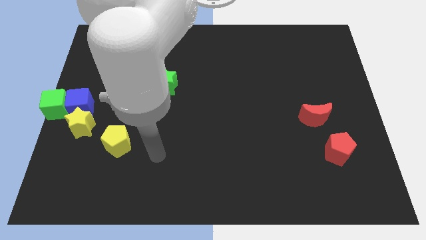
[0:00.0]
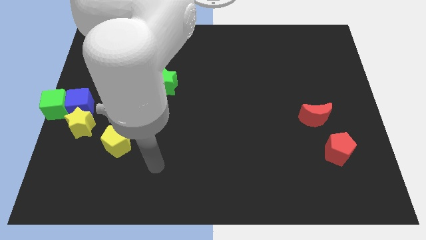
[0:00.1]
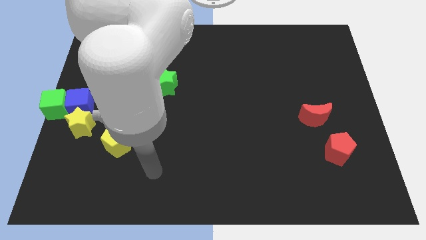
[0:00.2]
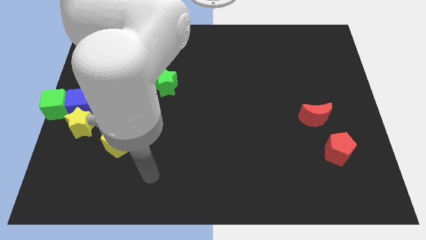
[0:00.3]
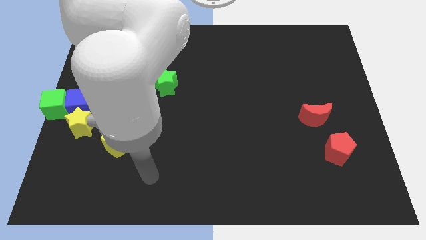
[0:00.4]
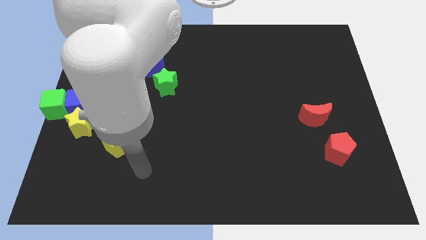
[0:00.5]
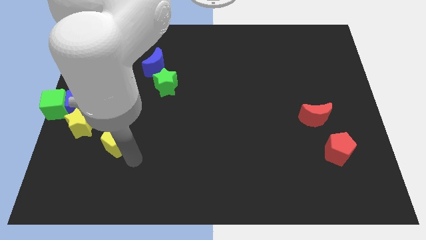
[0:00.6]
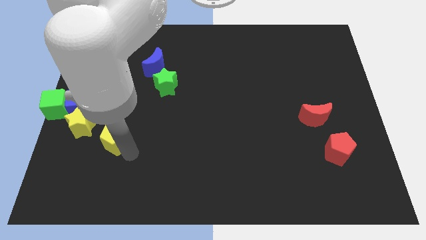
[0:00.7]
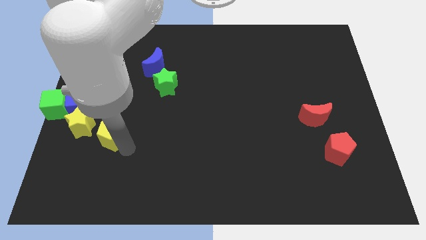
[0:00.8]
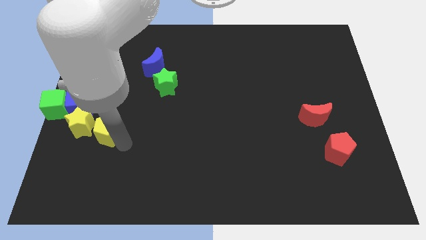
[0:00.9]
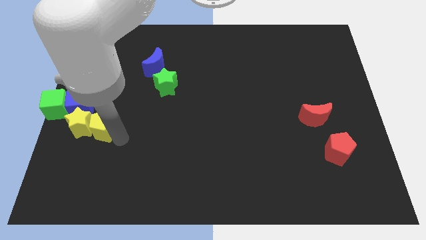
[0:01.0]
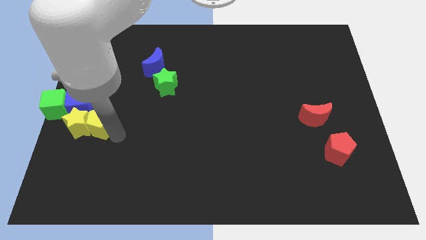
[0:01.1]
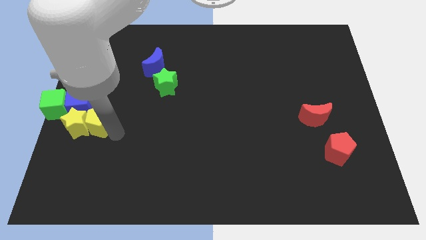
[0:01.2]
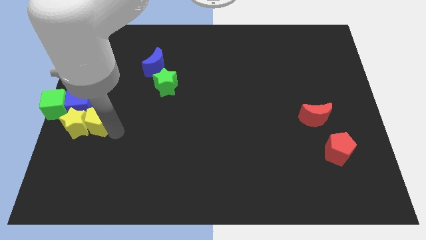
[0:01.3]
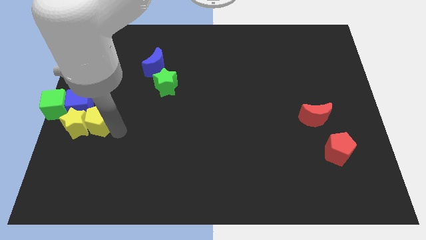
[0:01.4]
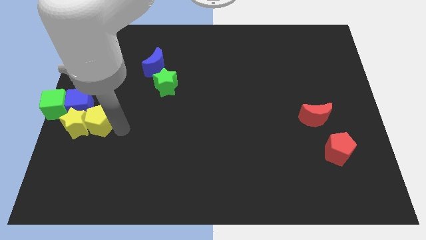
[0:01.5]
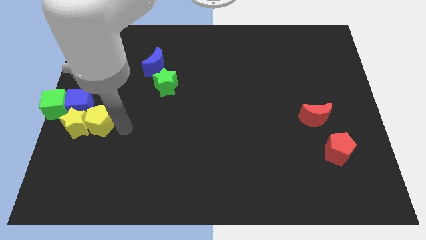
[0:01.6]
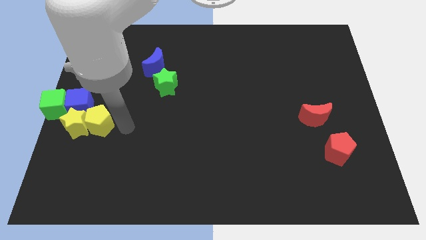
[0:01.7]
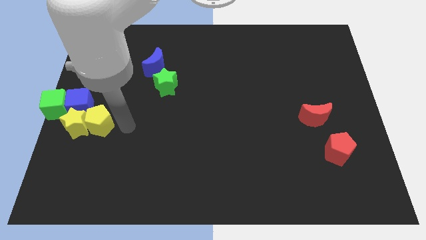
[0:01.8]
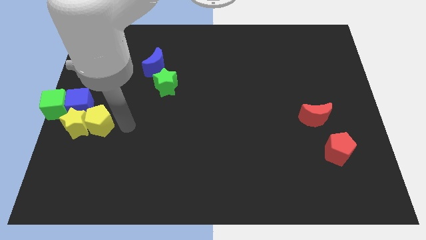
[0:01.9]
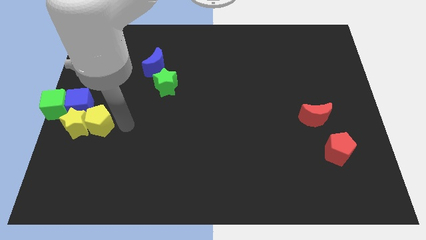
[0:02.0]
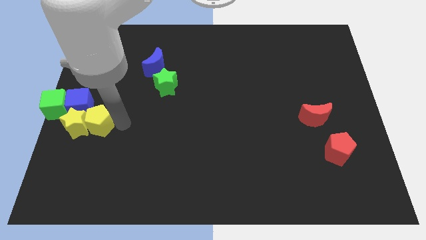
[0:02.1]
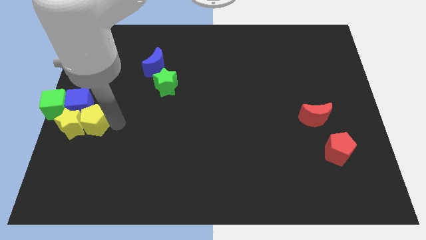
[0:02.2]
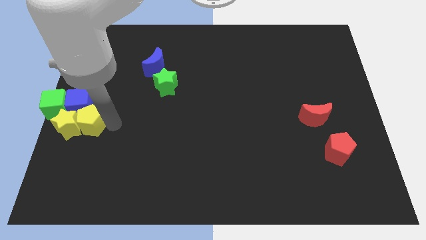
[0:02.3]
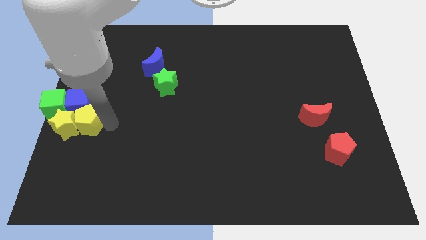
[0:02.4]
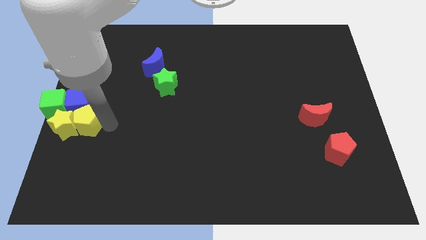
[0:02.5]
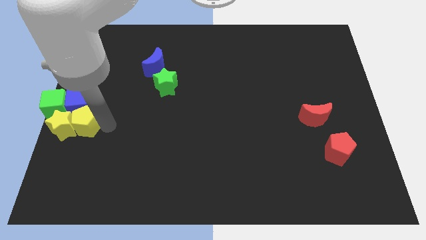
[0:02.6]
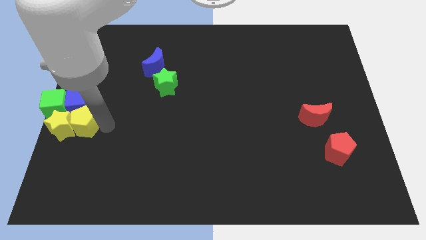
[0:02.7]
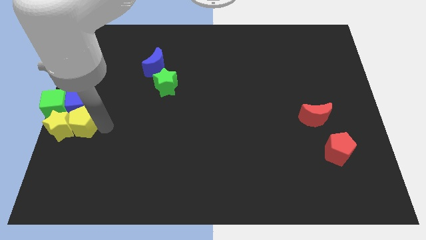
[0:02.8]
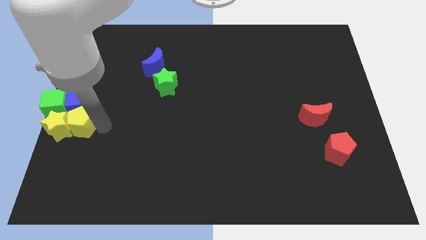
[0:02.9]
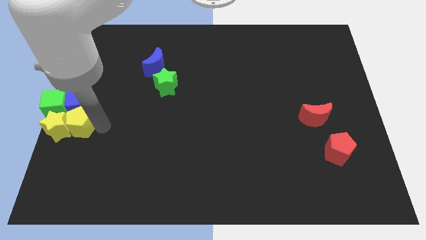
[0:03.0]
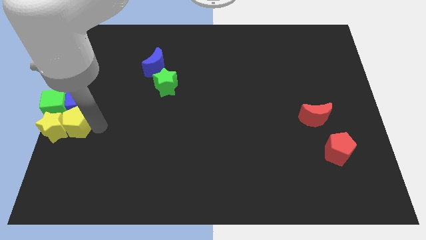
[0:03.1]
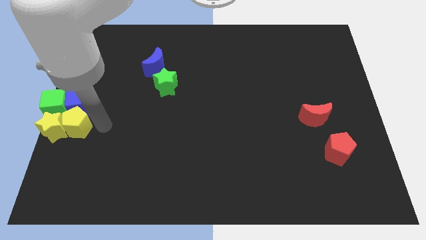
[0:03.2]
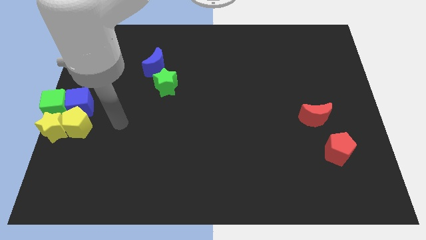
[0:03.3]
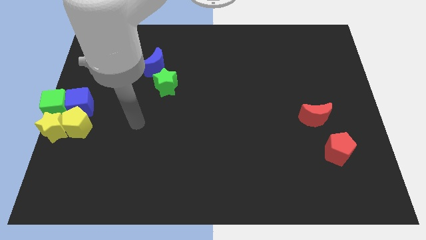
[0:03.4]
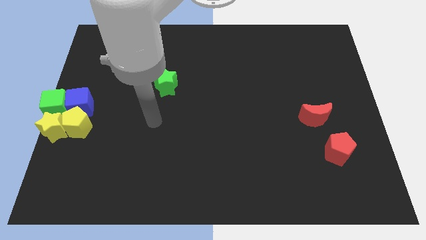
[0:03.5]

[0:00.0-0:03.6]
move the yellow star to the bottom side of the green cube with yellow pentagon

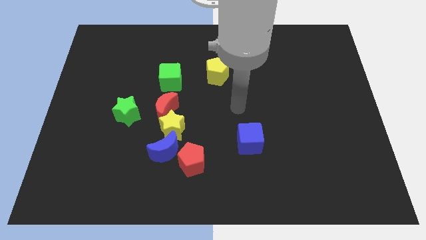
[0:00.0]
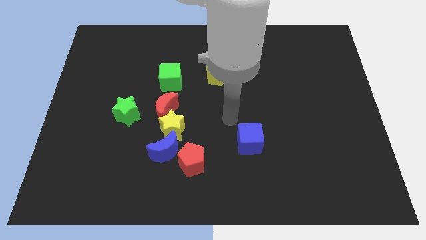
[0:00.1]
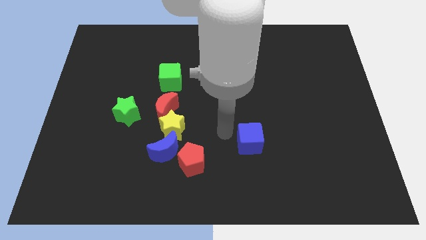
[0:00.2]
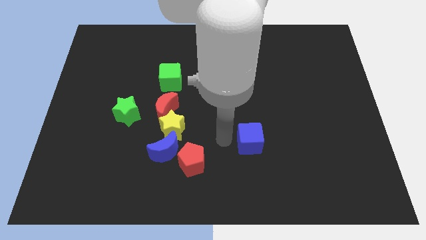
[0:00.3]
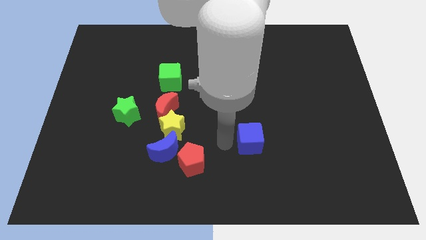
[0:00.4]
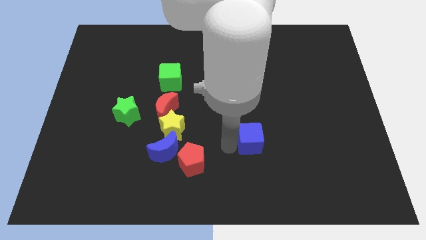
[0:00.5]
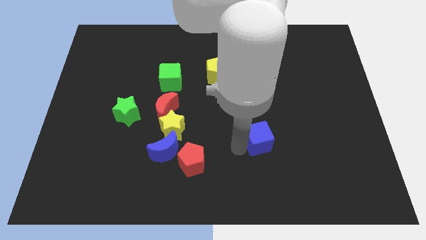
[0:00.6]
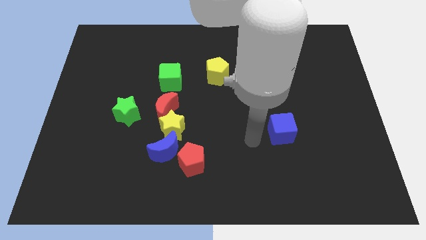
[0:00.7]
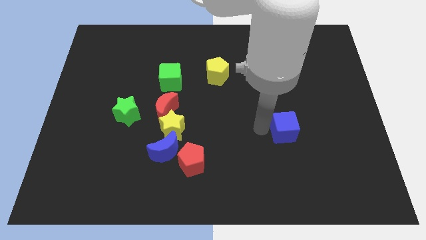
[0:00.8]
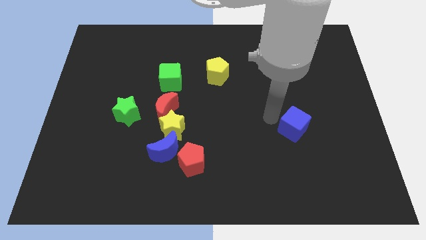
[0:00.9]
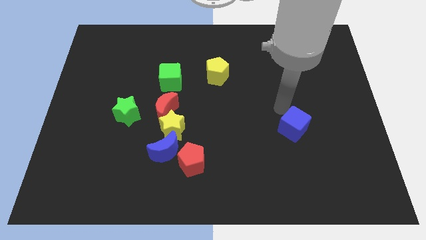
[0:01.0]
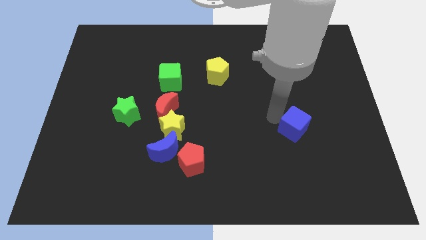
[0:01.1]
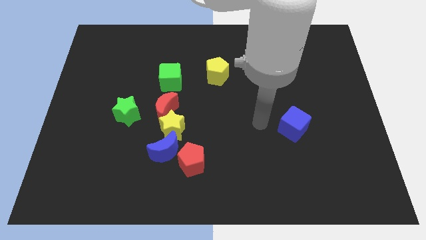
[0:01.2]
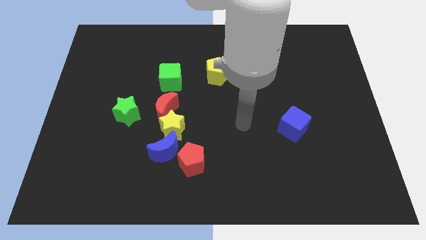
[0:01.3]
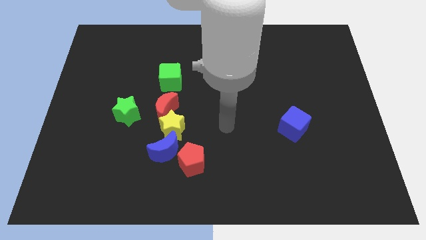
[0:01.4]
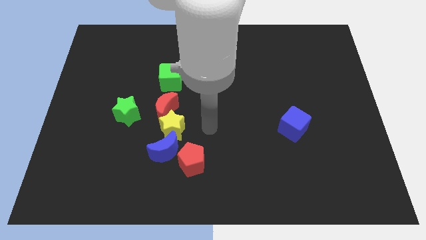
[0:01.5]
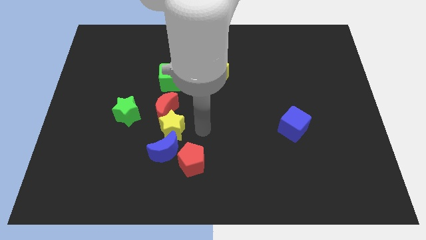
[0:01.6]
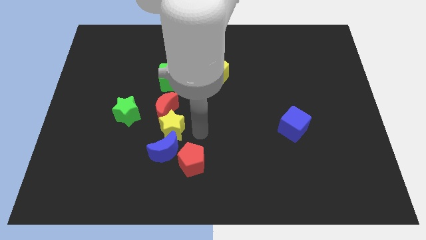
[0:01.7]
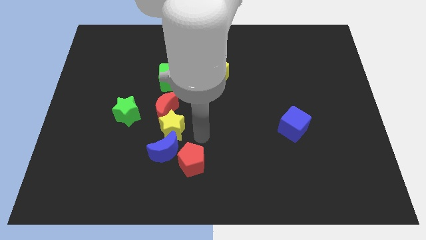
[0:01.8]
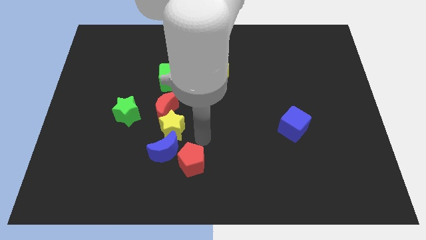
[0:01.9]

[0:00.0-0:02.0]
move the blue cube slightly to right

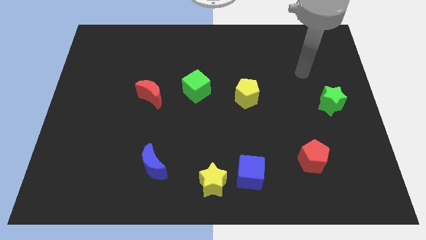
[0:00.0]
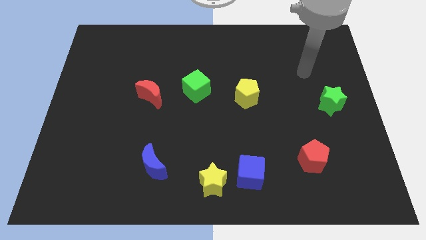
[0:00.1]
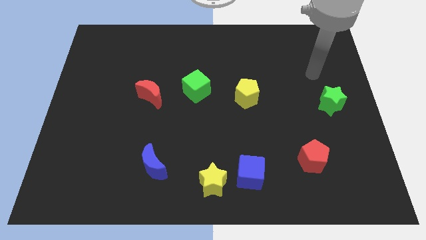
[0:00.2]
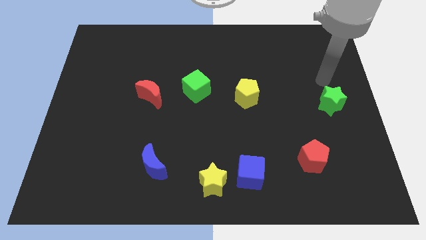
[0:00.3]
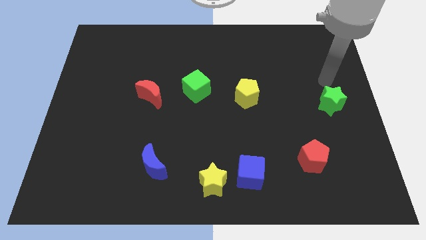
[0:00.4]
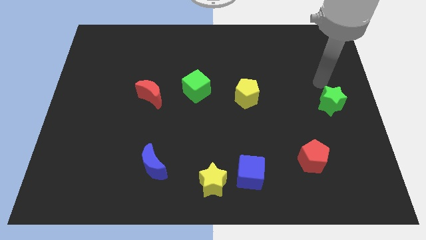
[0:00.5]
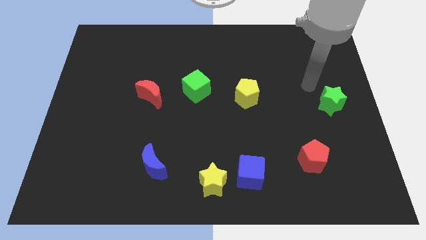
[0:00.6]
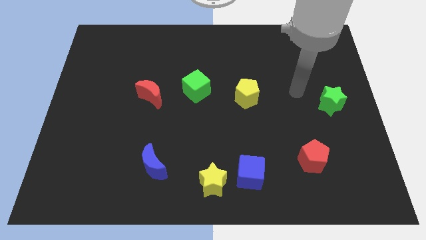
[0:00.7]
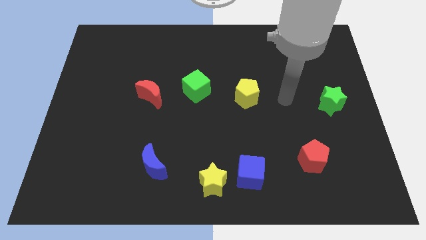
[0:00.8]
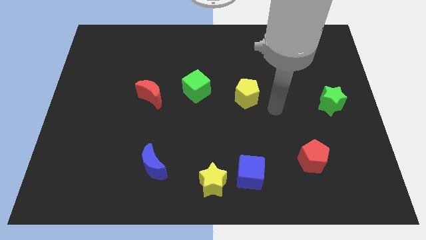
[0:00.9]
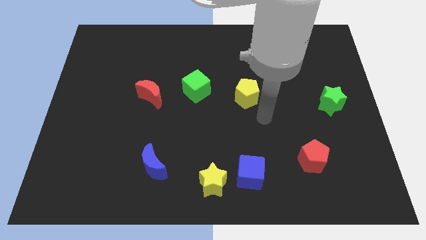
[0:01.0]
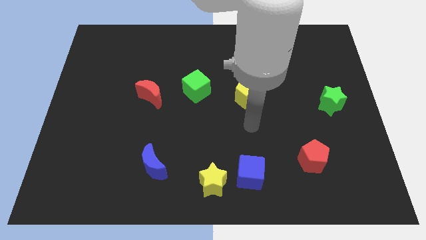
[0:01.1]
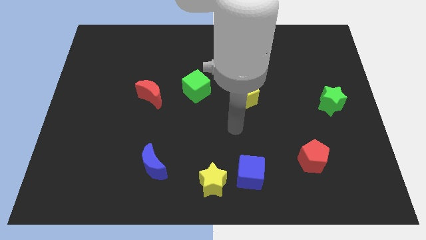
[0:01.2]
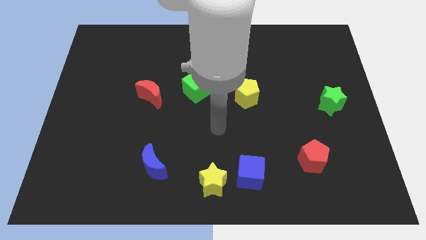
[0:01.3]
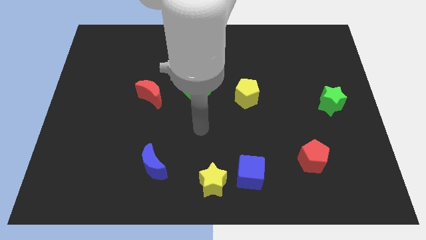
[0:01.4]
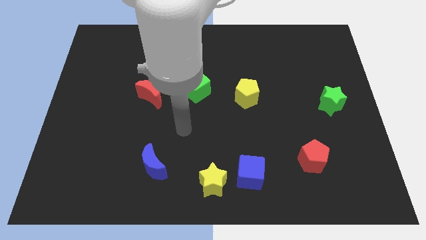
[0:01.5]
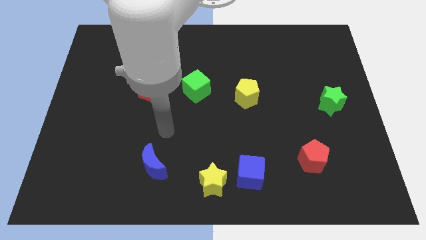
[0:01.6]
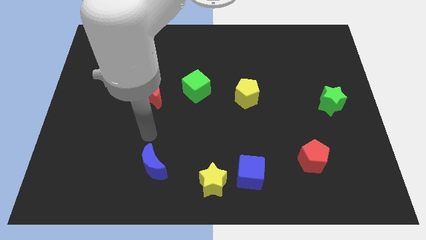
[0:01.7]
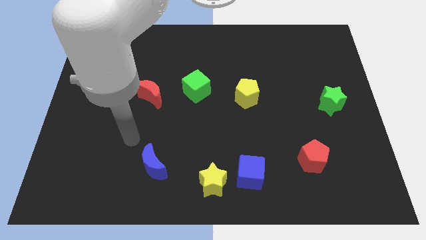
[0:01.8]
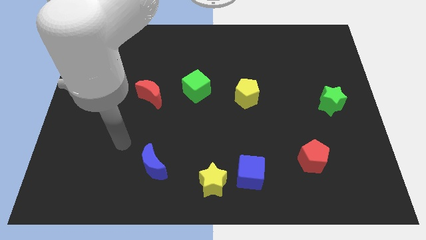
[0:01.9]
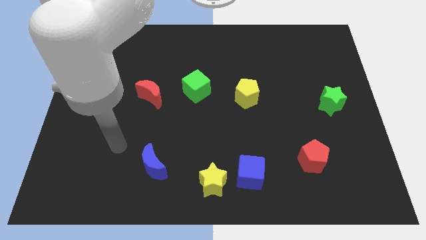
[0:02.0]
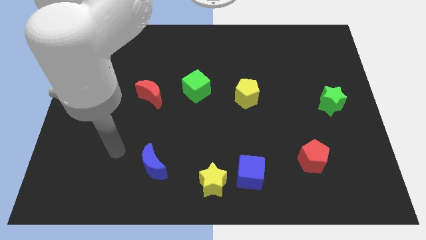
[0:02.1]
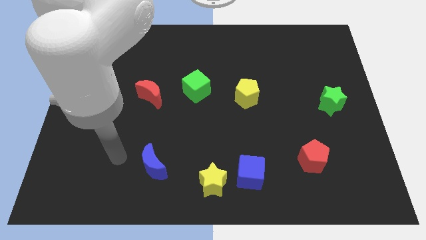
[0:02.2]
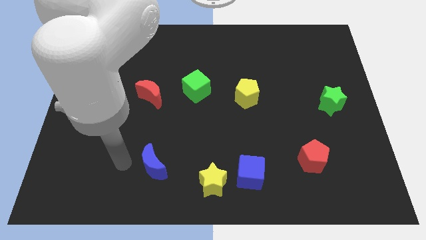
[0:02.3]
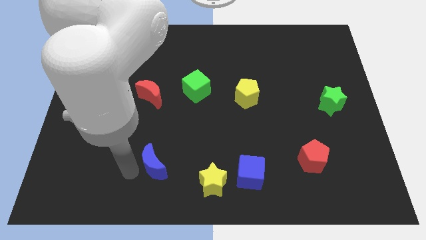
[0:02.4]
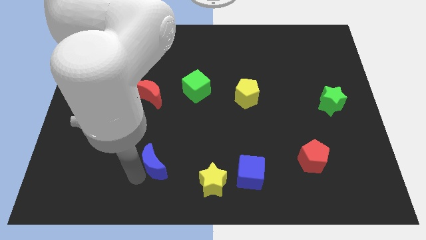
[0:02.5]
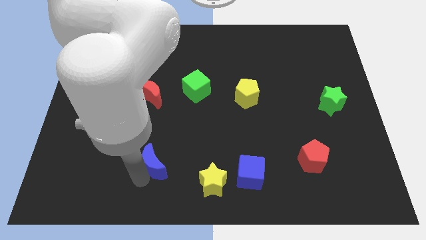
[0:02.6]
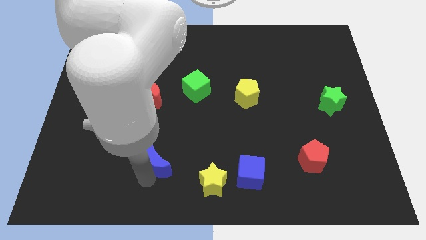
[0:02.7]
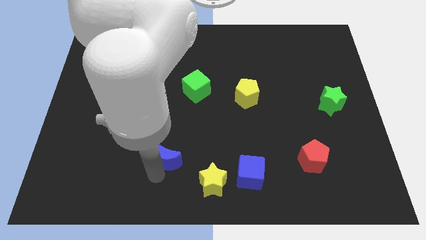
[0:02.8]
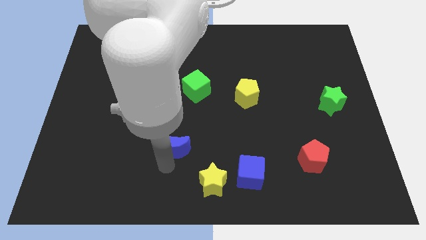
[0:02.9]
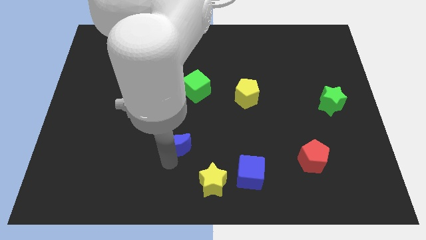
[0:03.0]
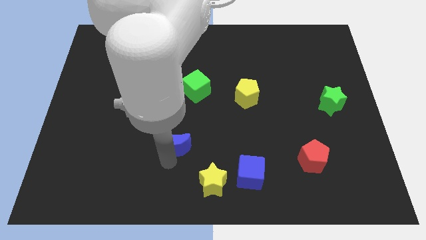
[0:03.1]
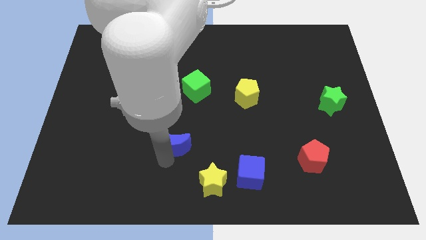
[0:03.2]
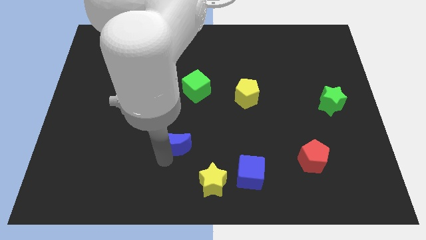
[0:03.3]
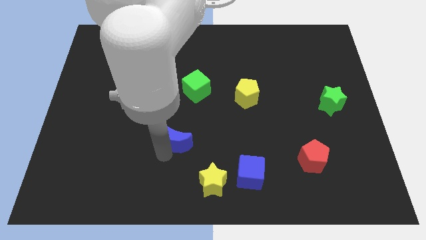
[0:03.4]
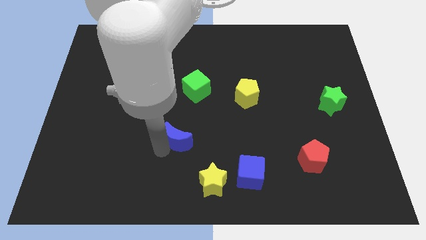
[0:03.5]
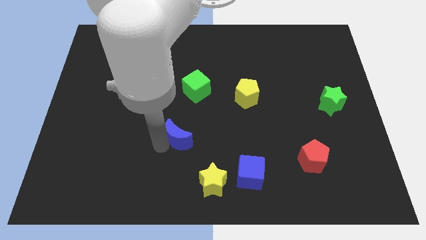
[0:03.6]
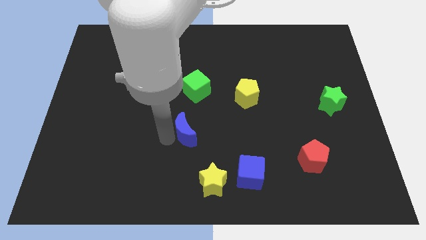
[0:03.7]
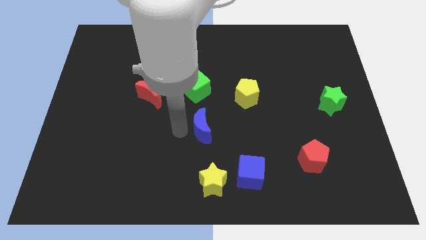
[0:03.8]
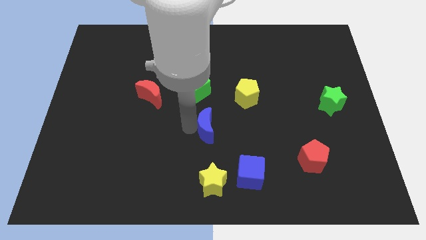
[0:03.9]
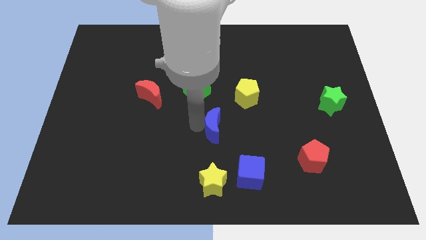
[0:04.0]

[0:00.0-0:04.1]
place blue moon below green cube
